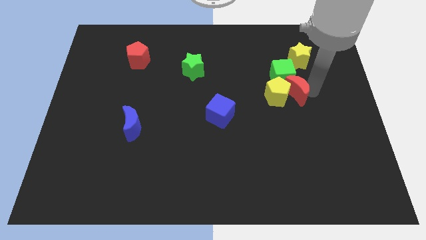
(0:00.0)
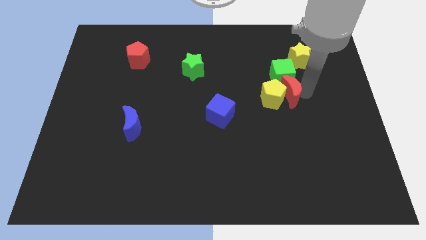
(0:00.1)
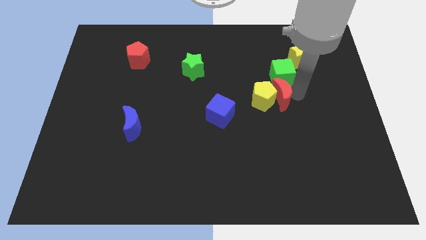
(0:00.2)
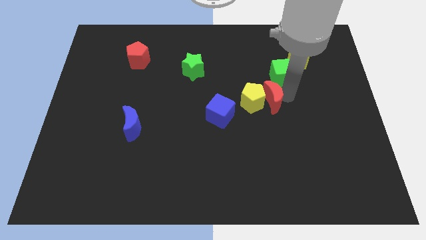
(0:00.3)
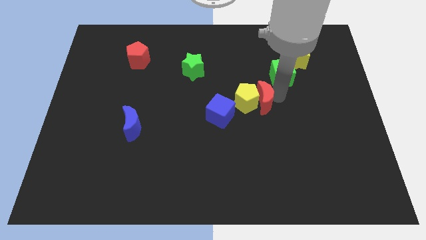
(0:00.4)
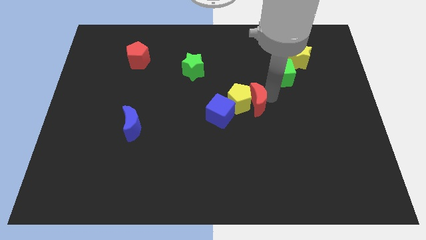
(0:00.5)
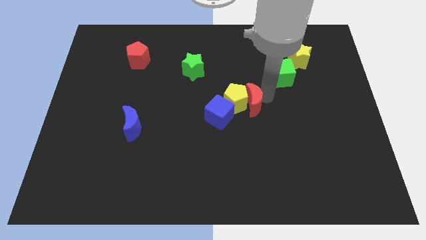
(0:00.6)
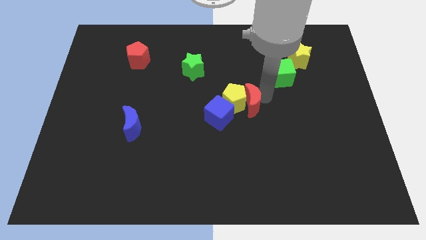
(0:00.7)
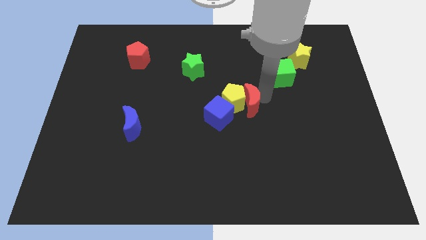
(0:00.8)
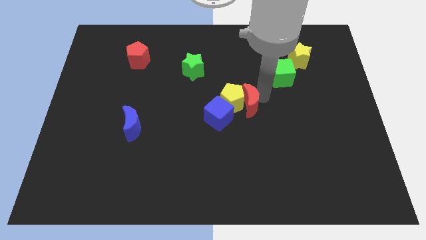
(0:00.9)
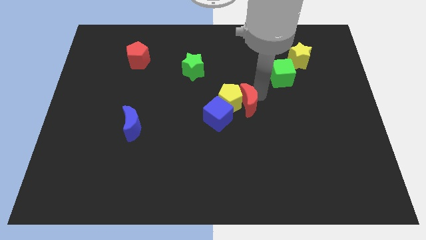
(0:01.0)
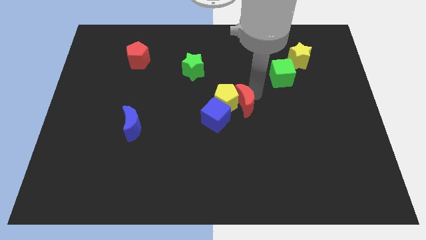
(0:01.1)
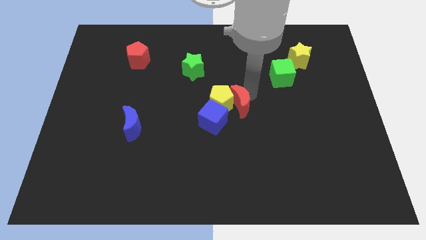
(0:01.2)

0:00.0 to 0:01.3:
push the red crescnt and yellow pentagon into the top side of the blue cube

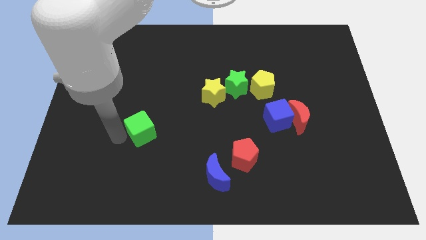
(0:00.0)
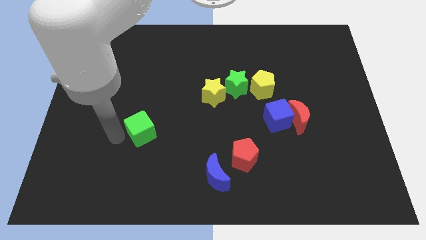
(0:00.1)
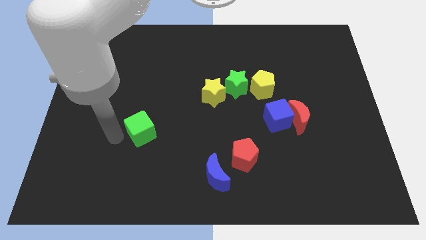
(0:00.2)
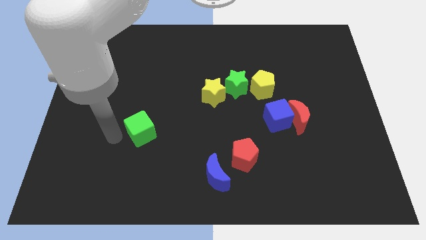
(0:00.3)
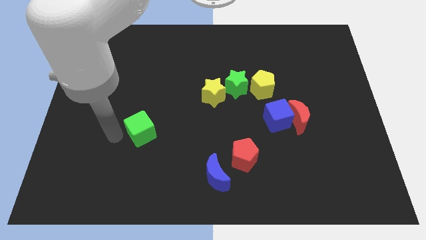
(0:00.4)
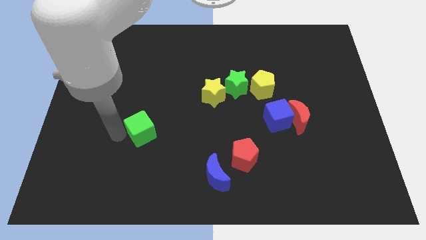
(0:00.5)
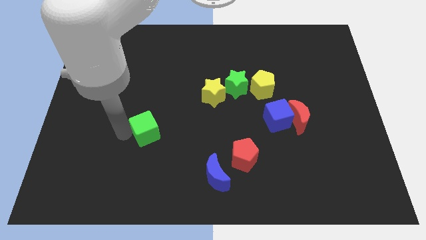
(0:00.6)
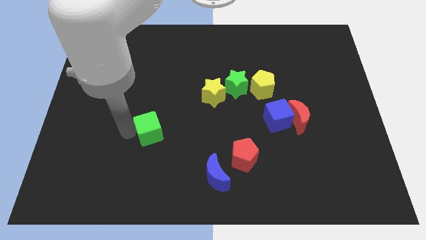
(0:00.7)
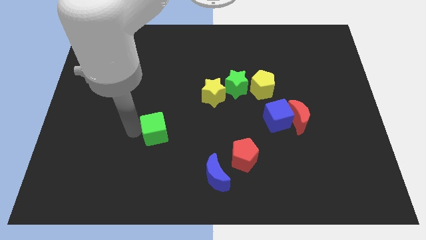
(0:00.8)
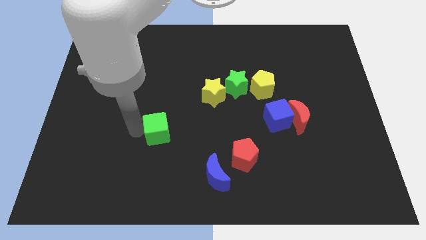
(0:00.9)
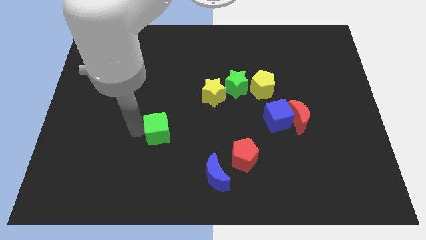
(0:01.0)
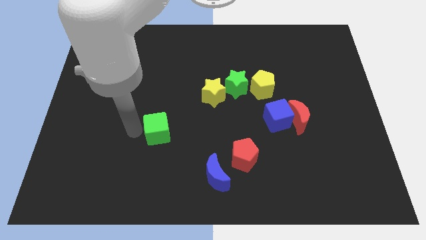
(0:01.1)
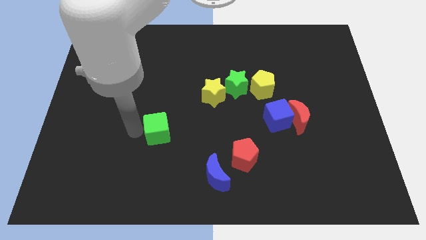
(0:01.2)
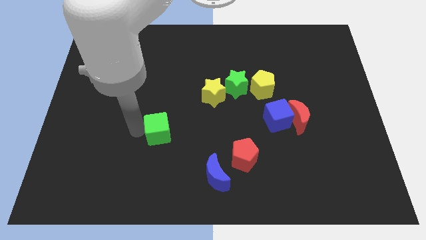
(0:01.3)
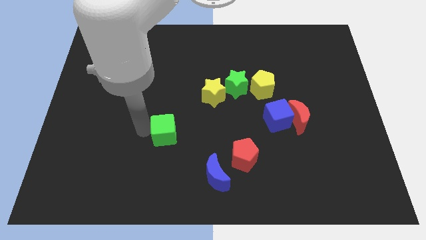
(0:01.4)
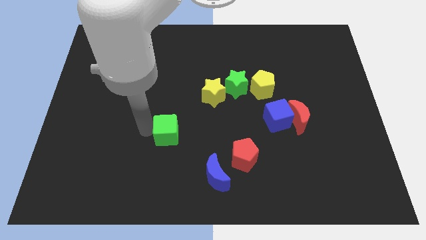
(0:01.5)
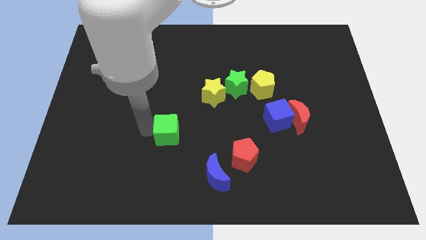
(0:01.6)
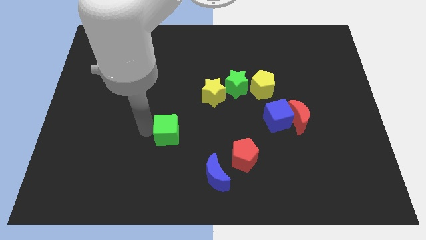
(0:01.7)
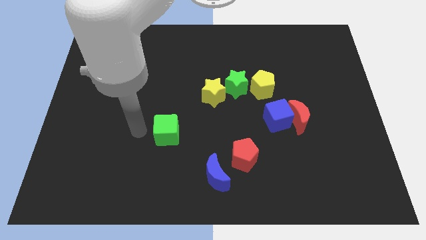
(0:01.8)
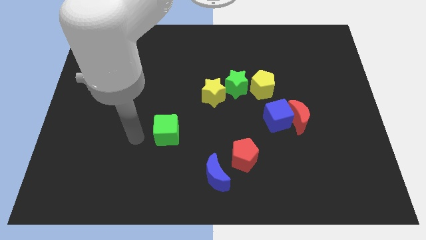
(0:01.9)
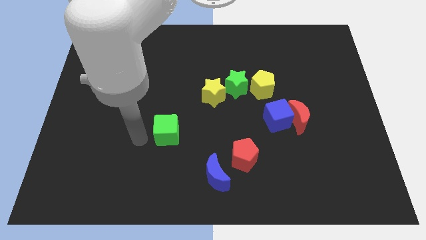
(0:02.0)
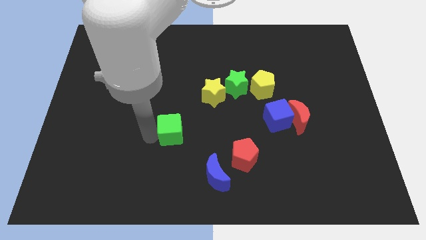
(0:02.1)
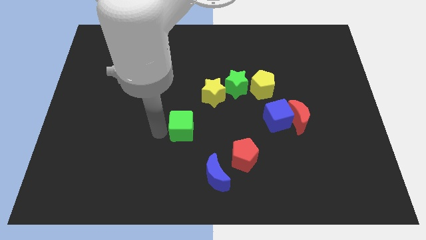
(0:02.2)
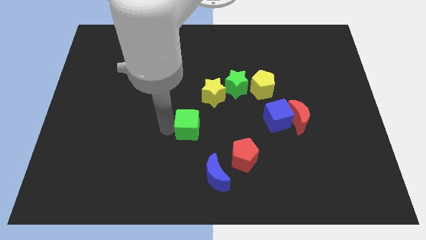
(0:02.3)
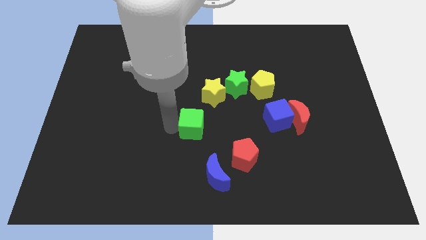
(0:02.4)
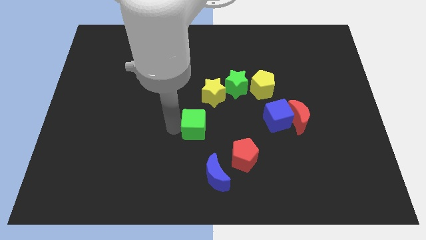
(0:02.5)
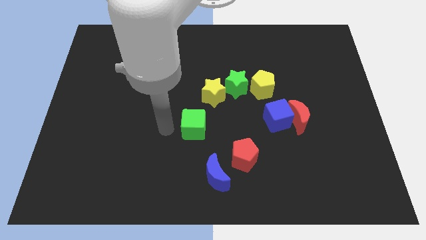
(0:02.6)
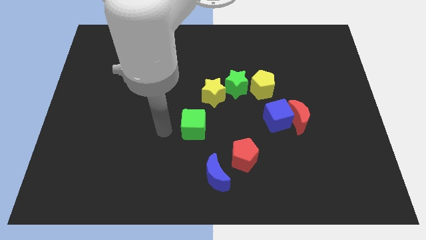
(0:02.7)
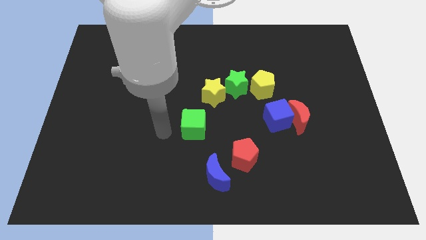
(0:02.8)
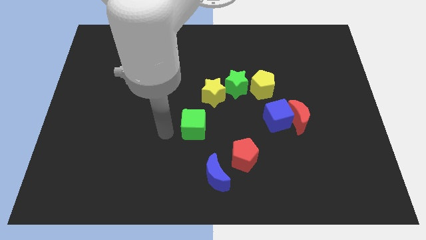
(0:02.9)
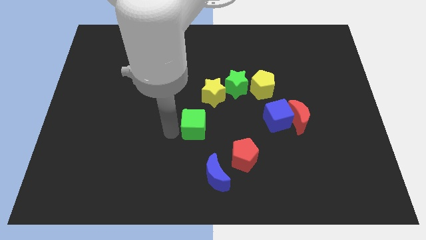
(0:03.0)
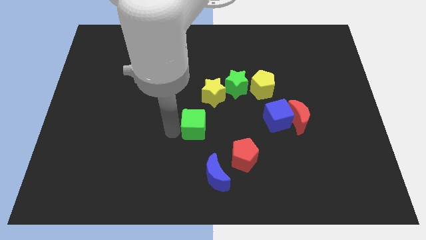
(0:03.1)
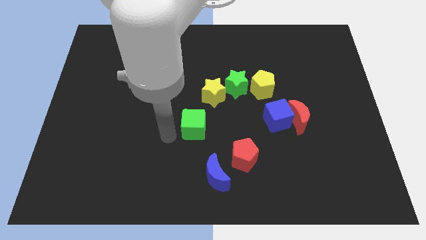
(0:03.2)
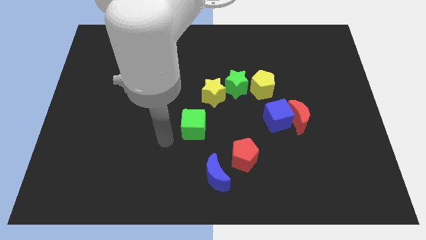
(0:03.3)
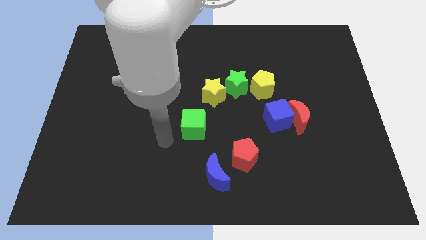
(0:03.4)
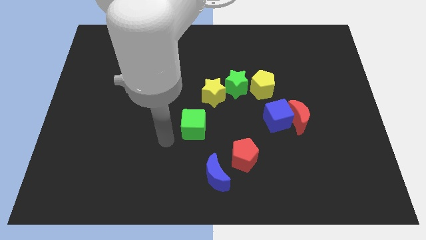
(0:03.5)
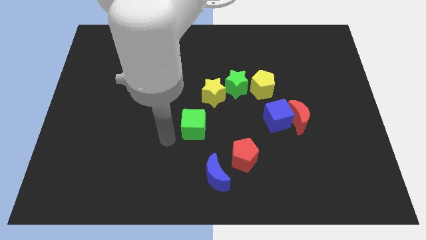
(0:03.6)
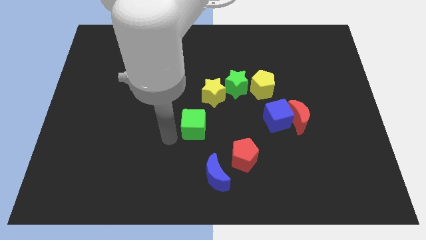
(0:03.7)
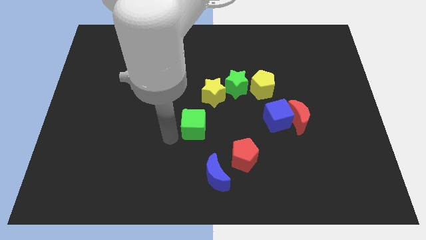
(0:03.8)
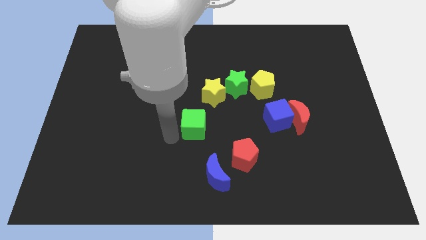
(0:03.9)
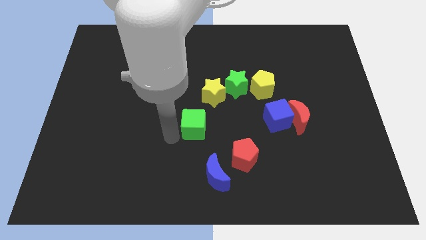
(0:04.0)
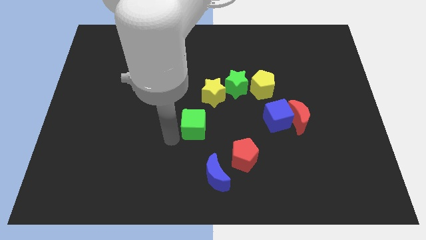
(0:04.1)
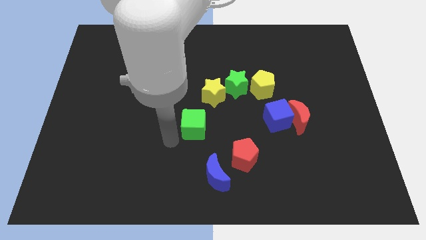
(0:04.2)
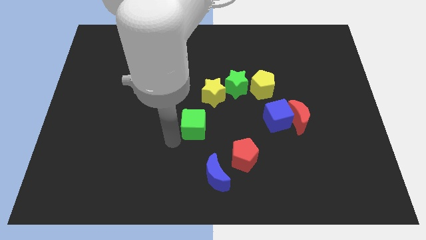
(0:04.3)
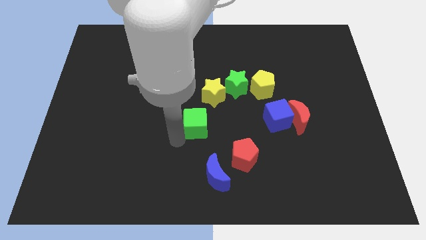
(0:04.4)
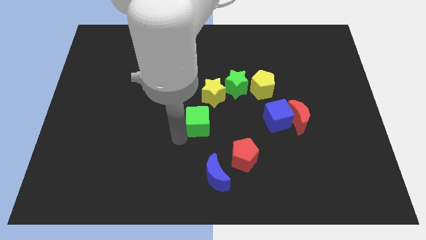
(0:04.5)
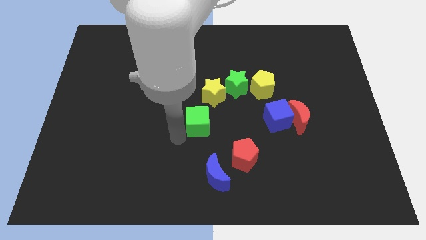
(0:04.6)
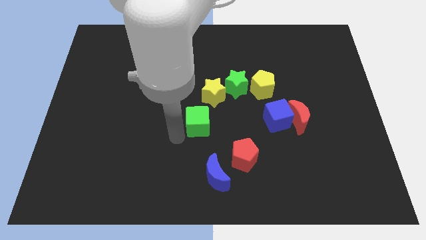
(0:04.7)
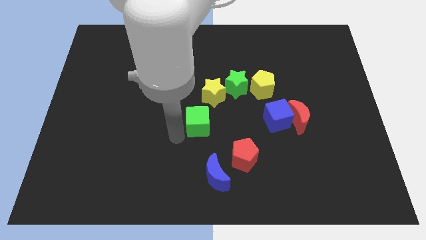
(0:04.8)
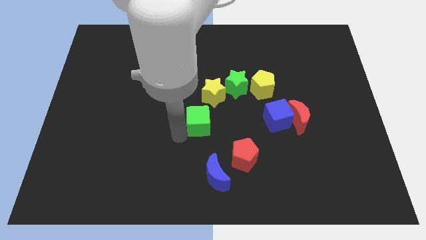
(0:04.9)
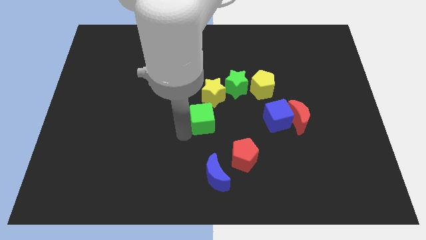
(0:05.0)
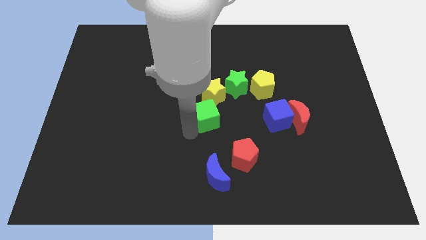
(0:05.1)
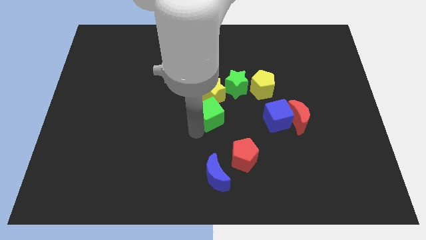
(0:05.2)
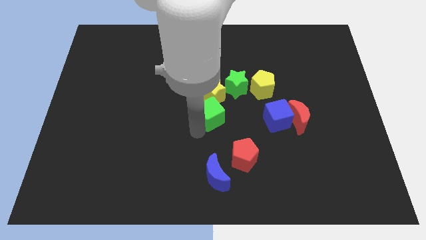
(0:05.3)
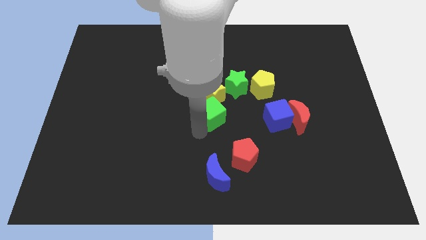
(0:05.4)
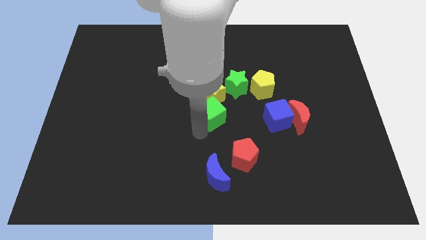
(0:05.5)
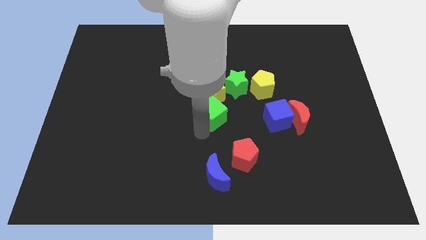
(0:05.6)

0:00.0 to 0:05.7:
move the green cube below the yellow star

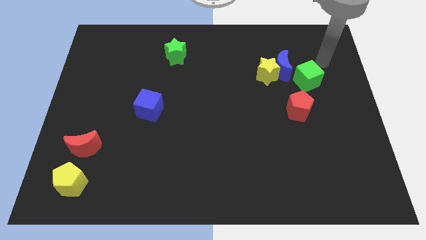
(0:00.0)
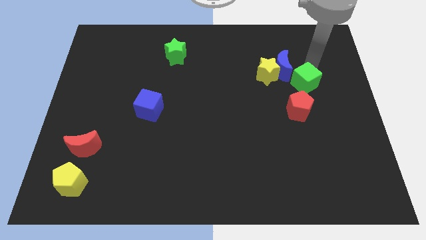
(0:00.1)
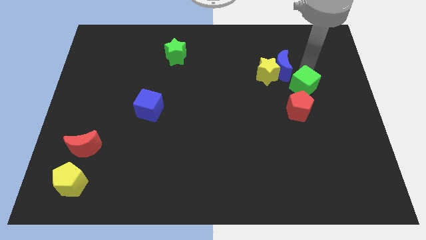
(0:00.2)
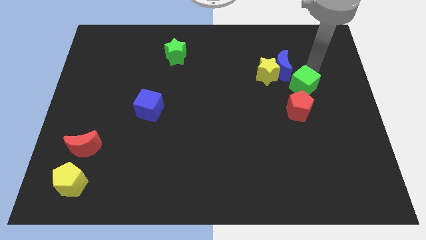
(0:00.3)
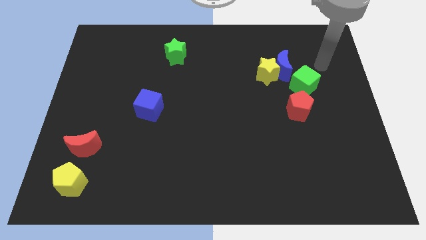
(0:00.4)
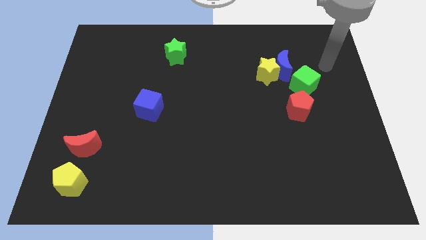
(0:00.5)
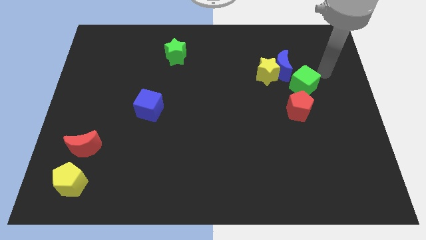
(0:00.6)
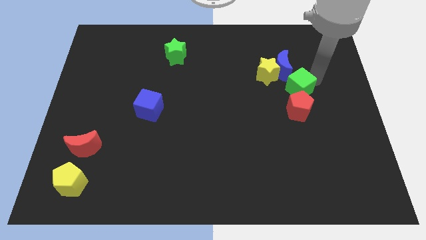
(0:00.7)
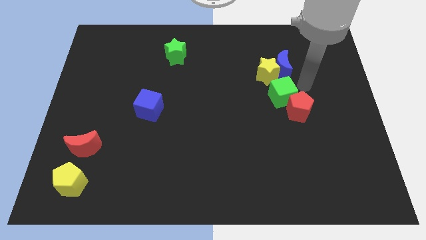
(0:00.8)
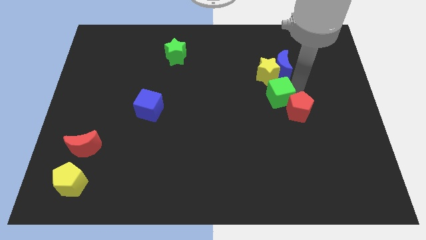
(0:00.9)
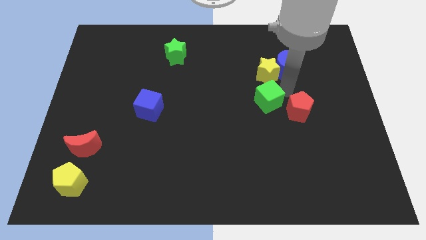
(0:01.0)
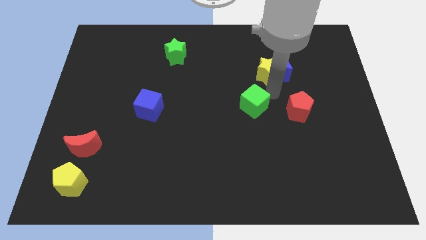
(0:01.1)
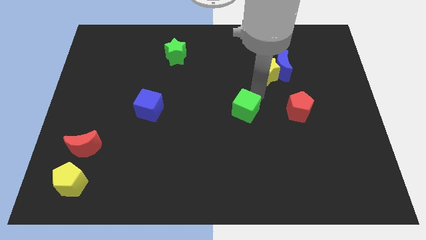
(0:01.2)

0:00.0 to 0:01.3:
place the green cube to the left of the red pentagon

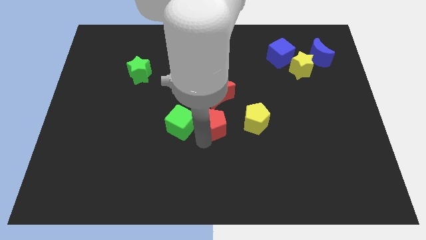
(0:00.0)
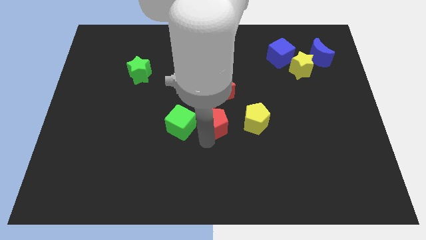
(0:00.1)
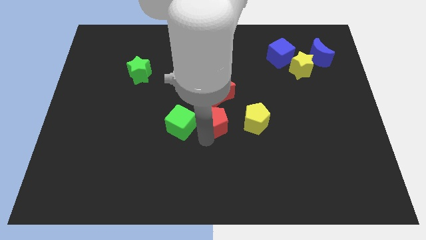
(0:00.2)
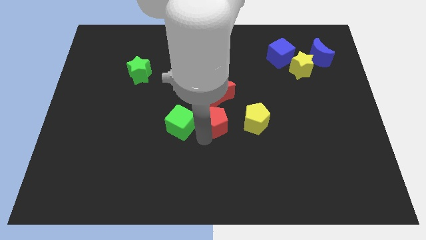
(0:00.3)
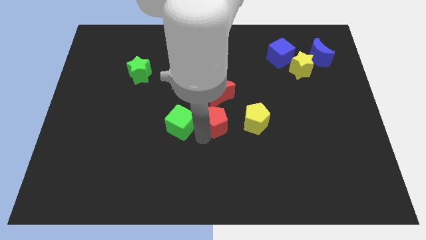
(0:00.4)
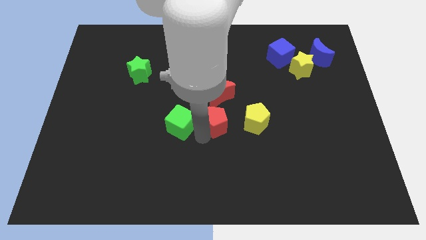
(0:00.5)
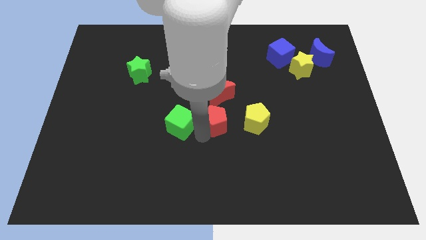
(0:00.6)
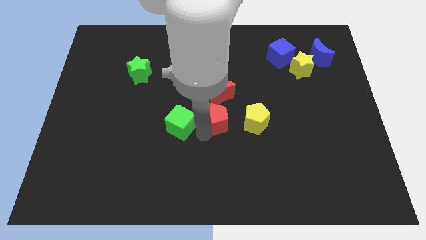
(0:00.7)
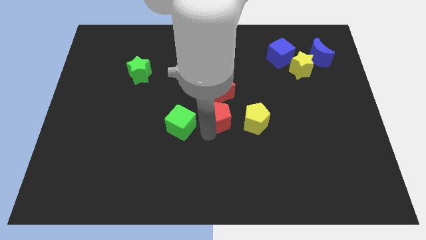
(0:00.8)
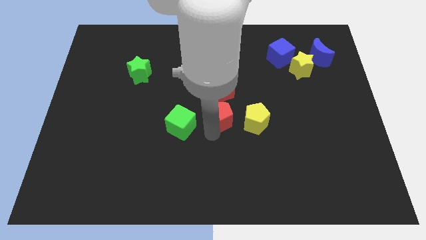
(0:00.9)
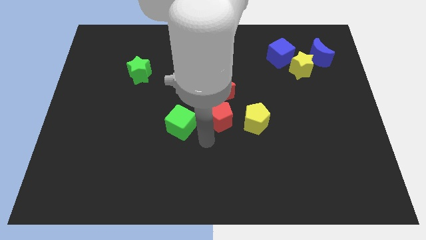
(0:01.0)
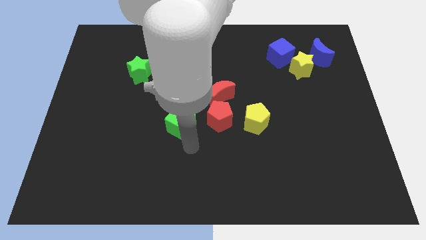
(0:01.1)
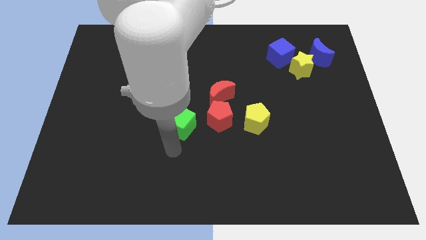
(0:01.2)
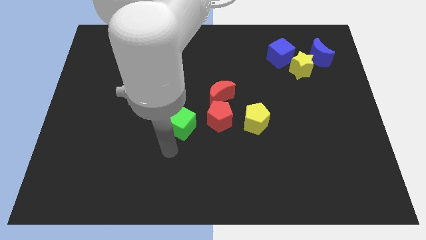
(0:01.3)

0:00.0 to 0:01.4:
move the red pentagon to the center of the board
